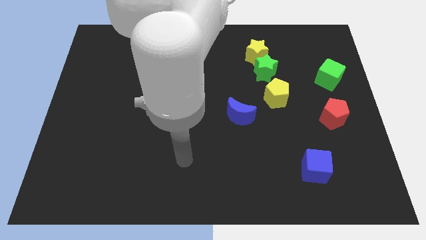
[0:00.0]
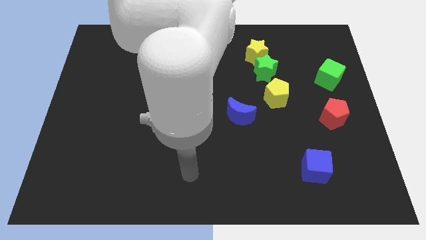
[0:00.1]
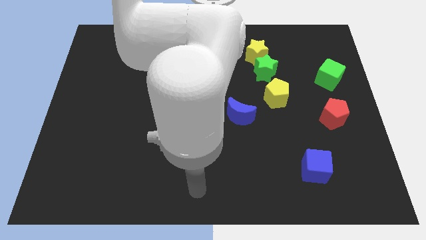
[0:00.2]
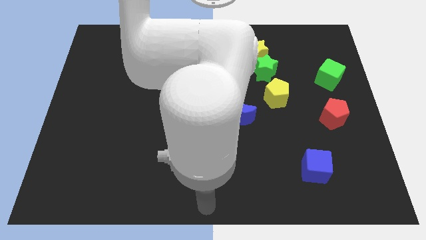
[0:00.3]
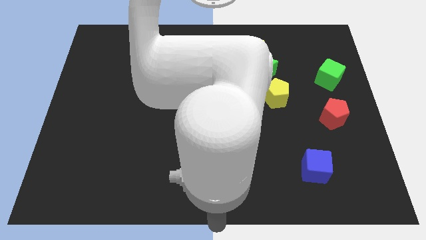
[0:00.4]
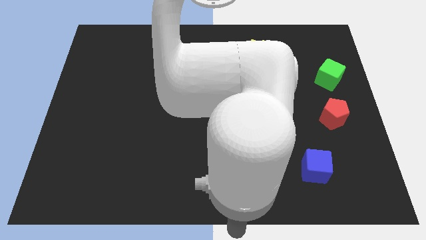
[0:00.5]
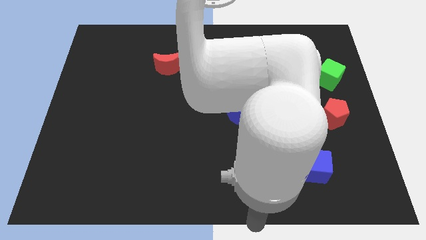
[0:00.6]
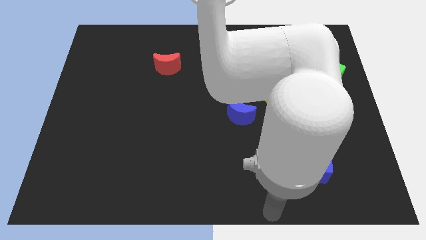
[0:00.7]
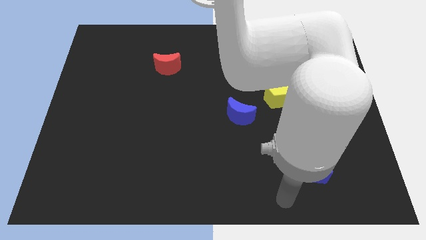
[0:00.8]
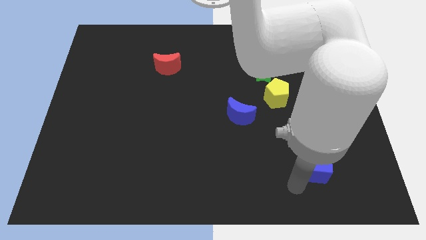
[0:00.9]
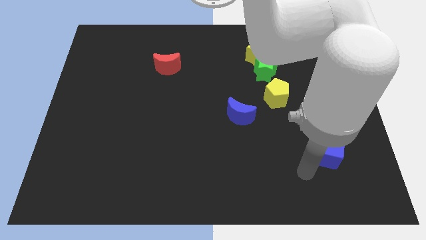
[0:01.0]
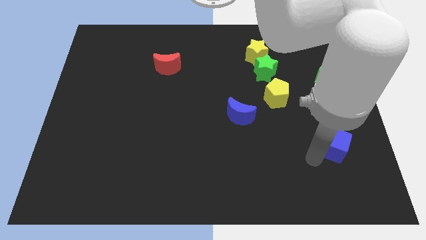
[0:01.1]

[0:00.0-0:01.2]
push the blue cube to the bottom of the red pentagon

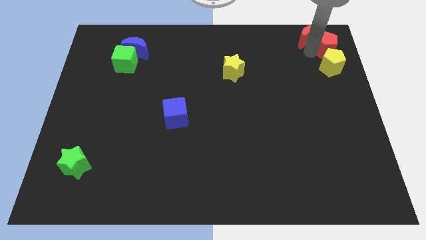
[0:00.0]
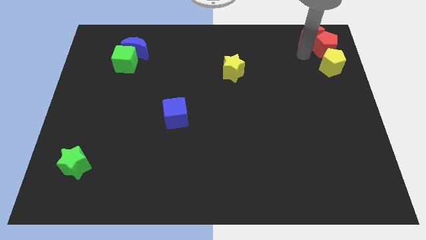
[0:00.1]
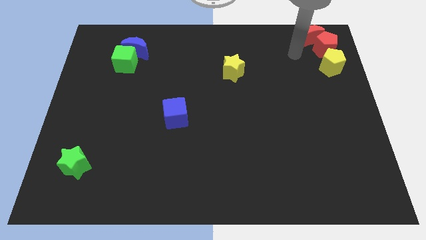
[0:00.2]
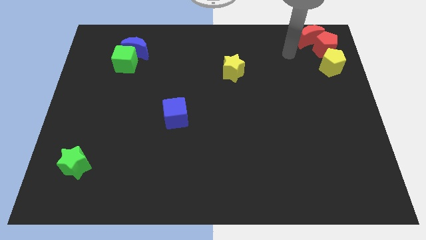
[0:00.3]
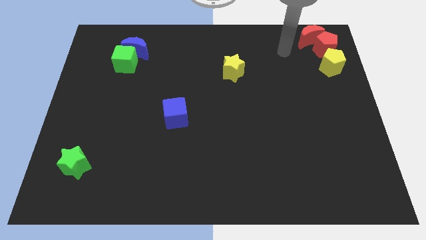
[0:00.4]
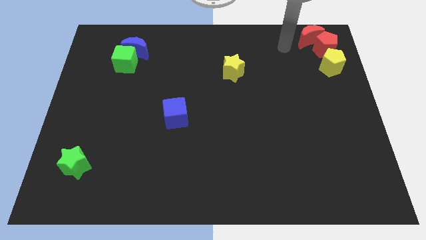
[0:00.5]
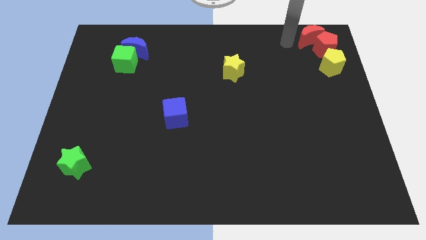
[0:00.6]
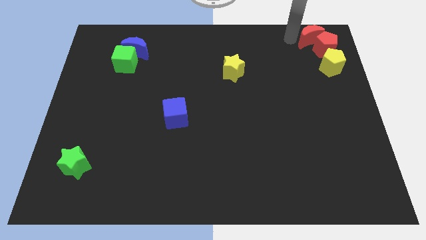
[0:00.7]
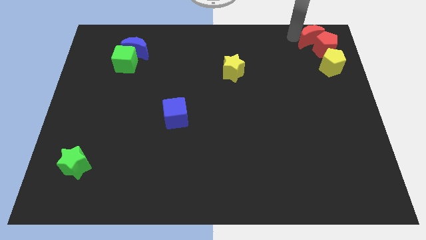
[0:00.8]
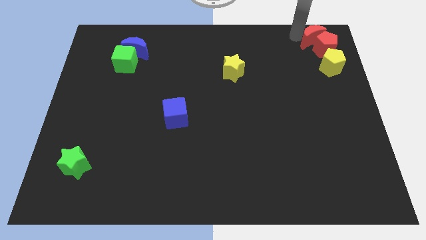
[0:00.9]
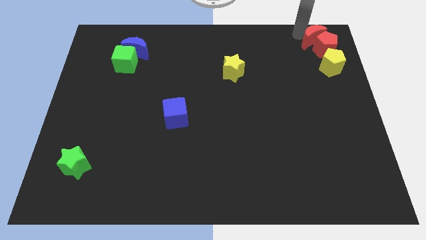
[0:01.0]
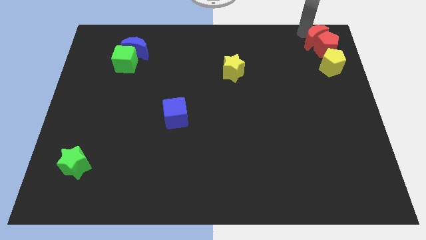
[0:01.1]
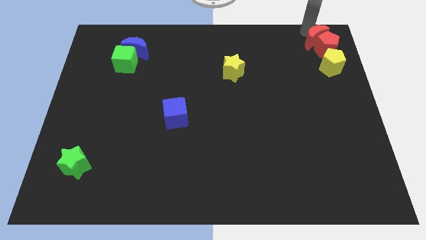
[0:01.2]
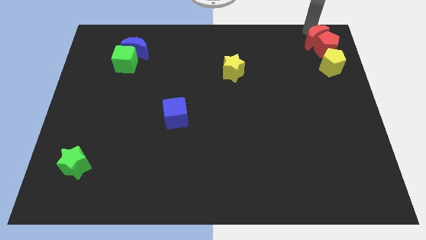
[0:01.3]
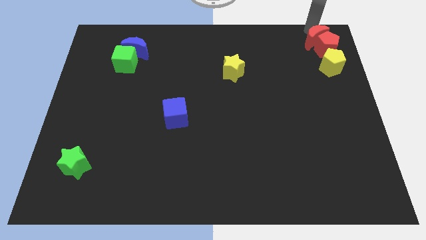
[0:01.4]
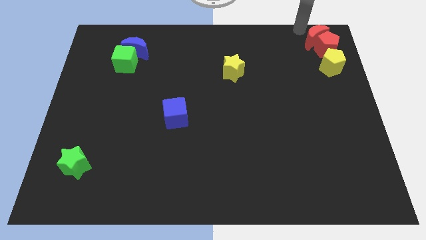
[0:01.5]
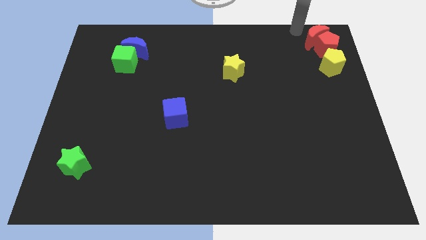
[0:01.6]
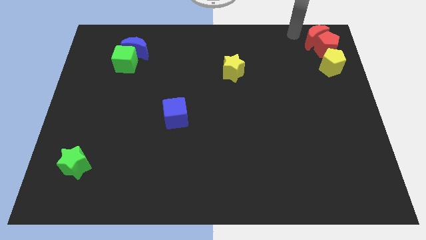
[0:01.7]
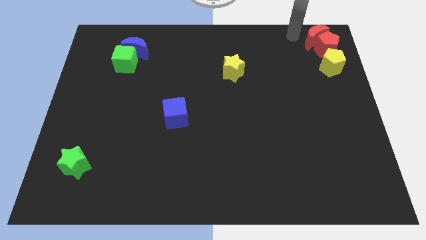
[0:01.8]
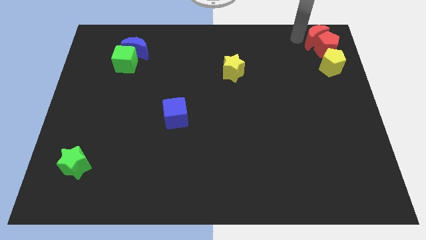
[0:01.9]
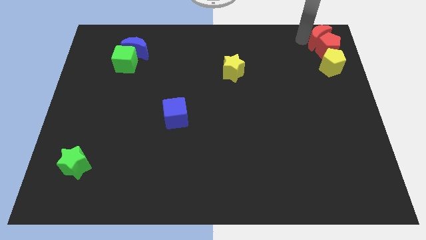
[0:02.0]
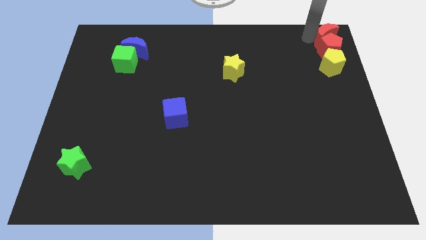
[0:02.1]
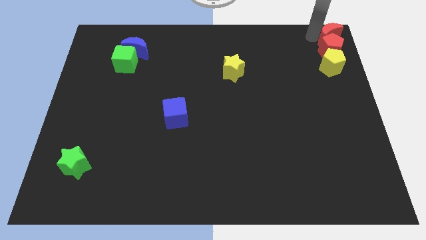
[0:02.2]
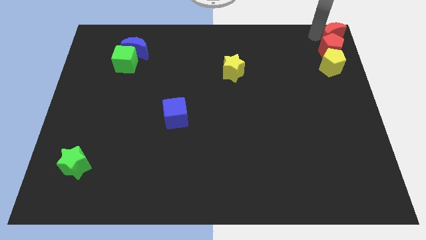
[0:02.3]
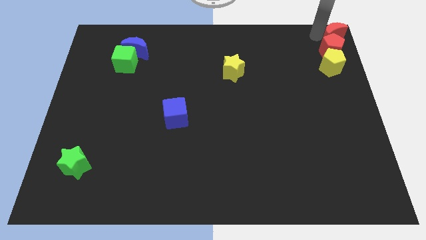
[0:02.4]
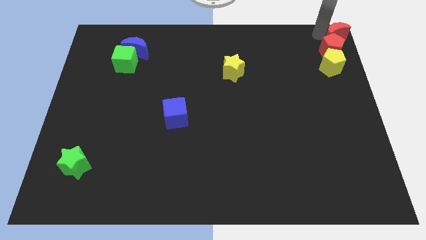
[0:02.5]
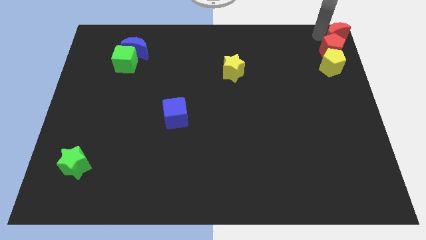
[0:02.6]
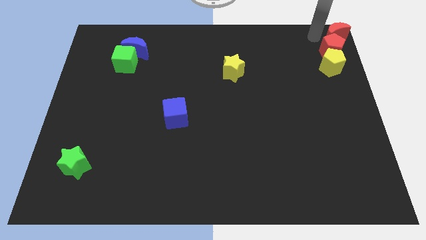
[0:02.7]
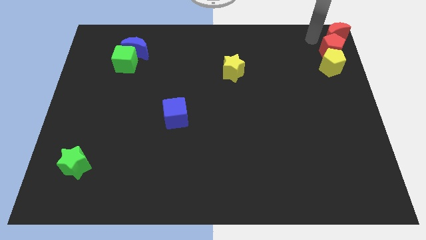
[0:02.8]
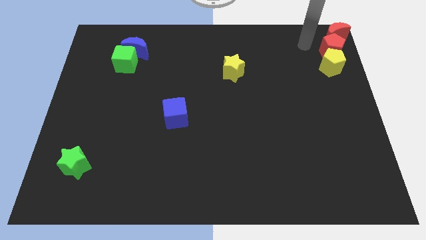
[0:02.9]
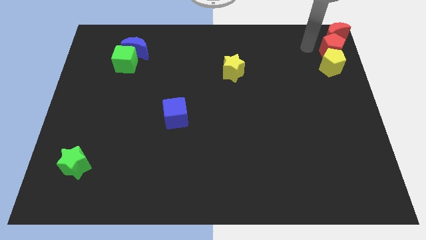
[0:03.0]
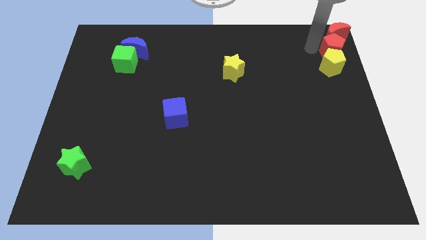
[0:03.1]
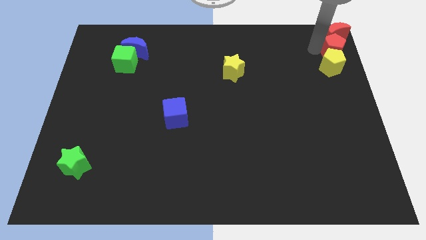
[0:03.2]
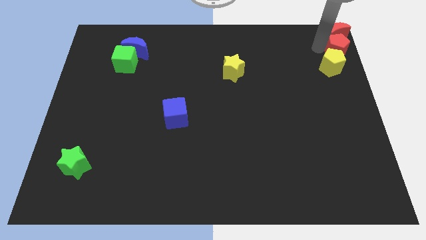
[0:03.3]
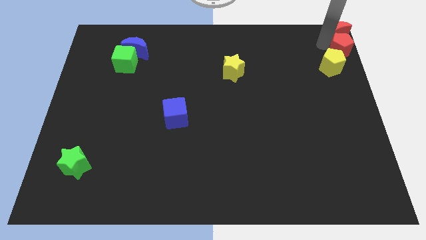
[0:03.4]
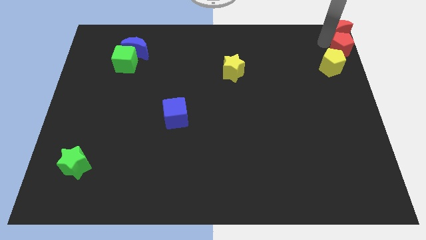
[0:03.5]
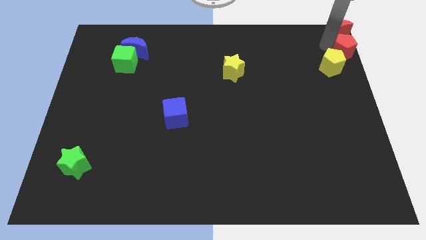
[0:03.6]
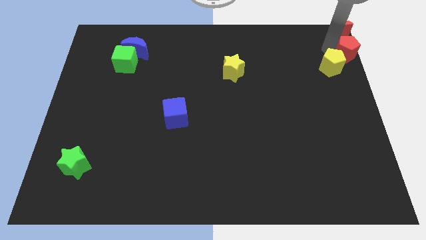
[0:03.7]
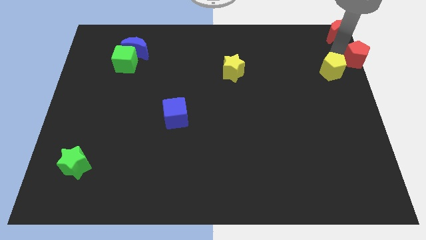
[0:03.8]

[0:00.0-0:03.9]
place the red crescent and red pentagon to the top right

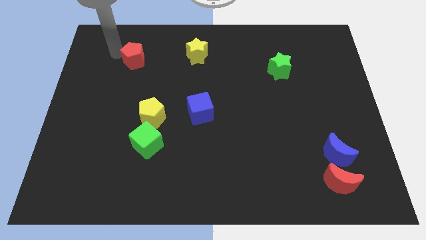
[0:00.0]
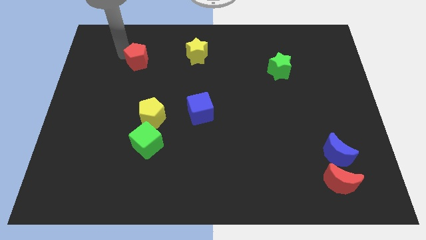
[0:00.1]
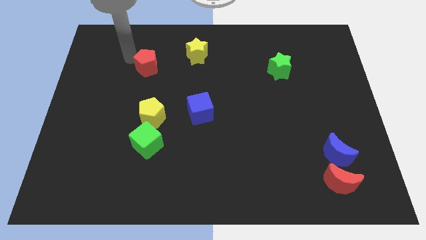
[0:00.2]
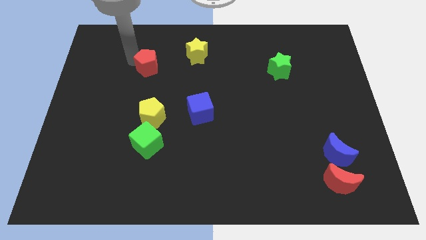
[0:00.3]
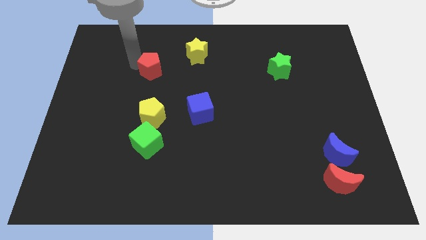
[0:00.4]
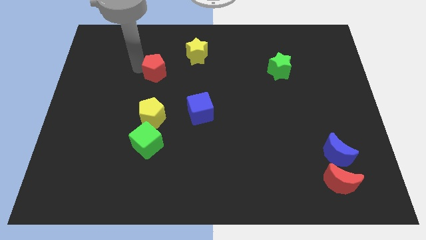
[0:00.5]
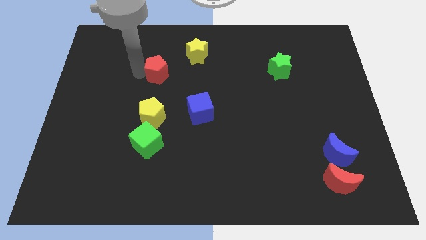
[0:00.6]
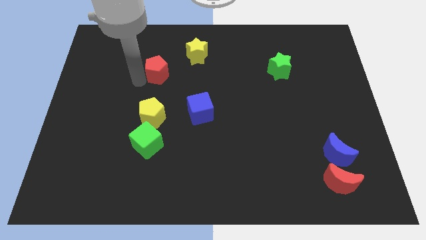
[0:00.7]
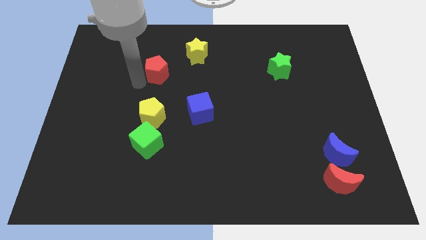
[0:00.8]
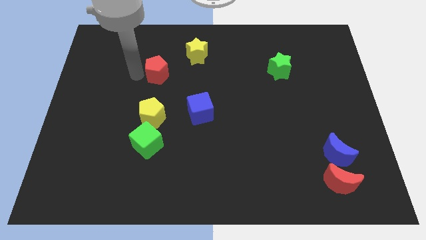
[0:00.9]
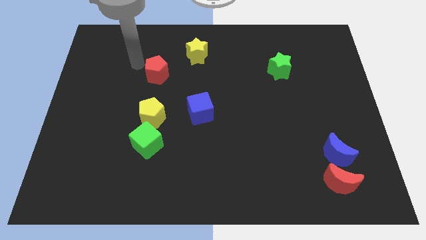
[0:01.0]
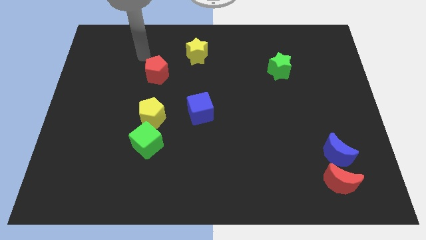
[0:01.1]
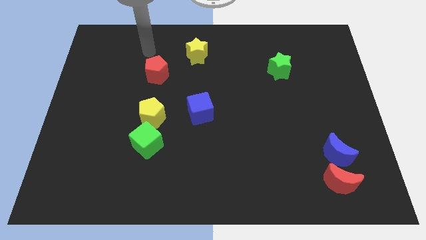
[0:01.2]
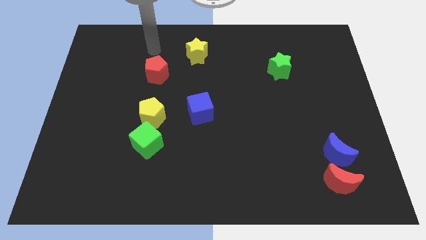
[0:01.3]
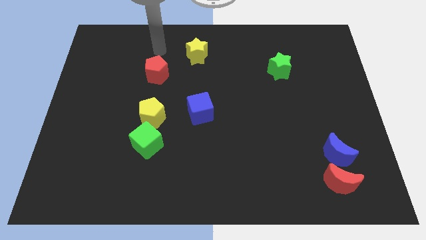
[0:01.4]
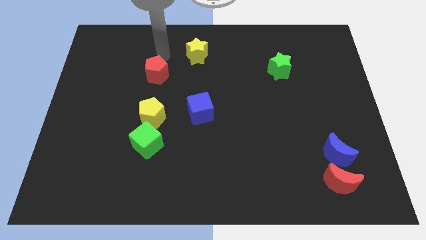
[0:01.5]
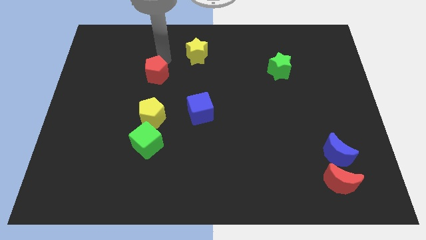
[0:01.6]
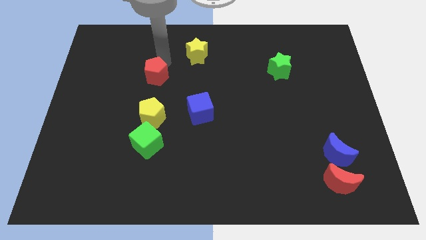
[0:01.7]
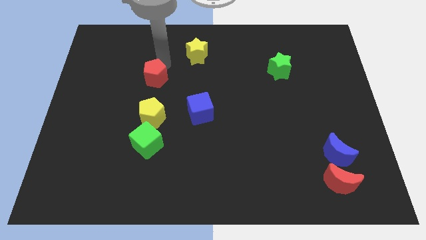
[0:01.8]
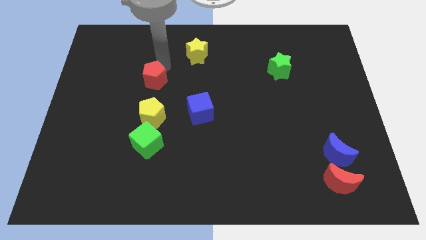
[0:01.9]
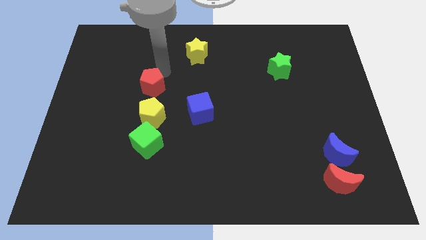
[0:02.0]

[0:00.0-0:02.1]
place the red pentagon above yellow pentagon

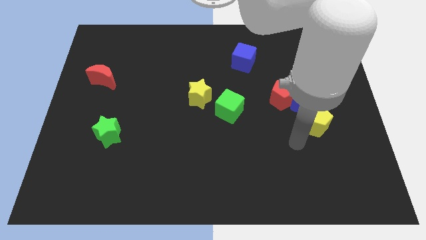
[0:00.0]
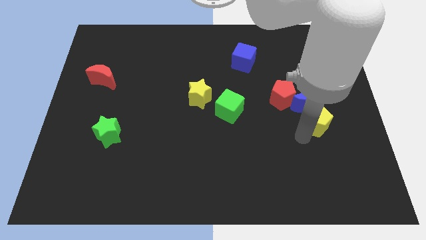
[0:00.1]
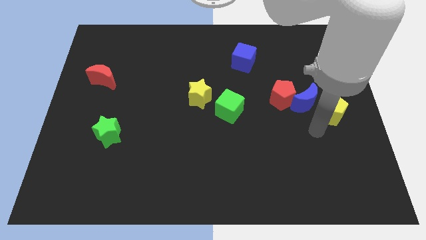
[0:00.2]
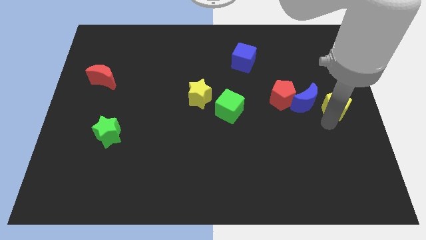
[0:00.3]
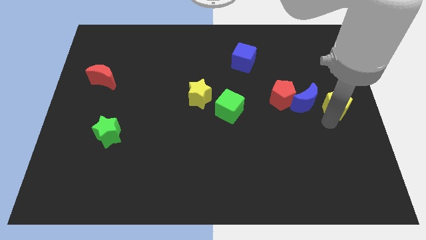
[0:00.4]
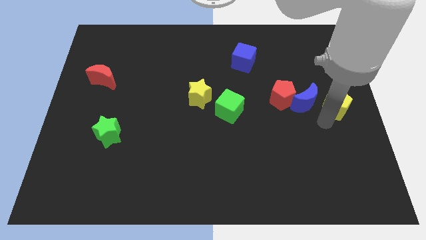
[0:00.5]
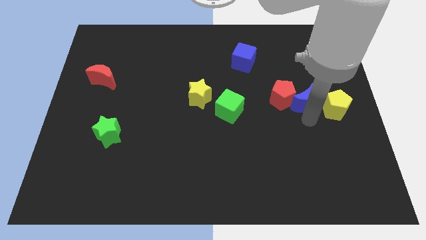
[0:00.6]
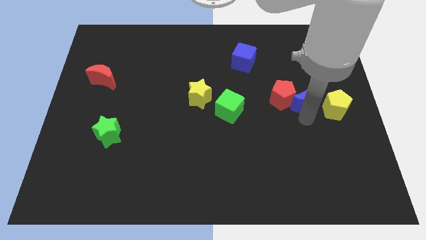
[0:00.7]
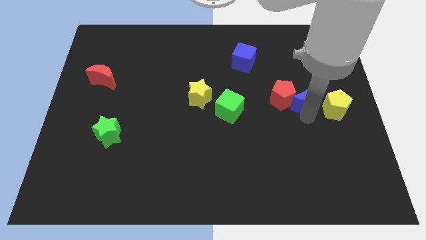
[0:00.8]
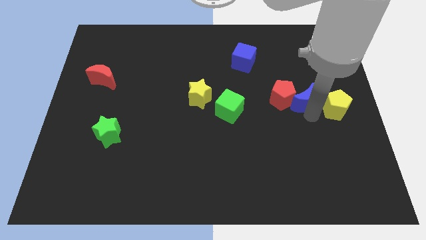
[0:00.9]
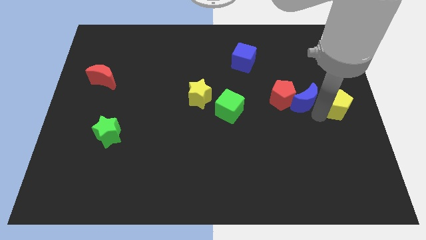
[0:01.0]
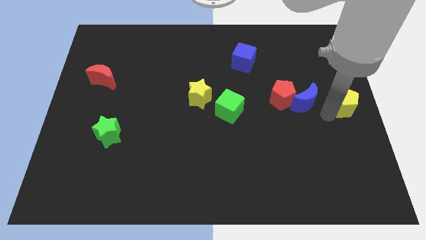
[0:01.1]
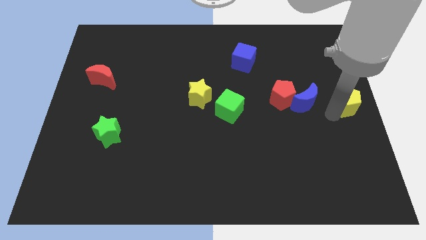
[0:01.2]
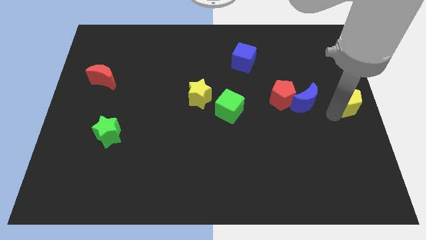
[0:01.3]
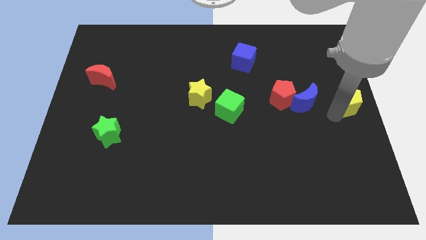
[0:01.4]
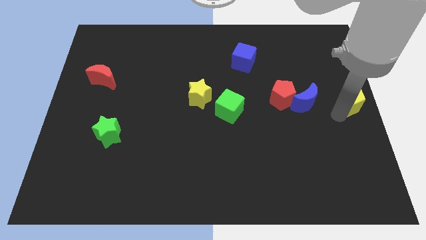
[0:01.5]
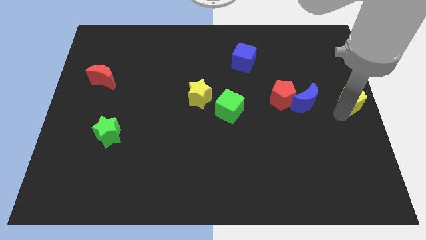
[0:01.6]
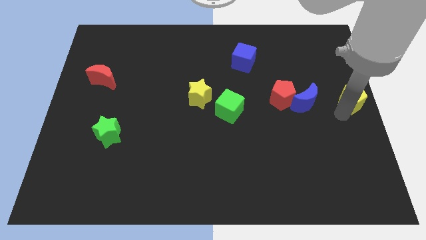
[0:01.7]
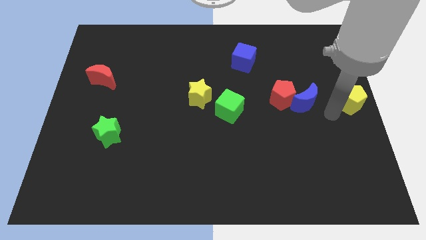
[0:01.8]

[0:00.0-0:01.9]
place the yellow pentagon at the center right side of the video
